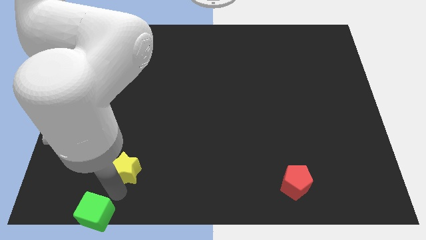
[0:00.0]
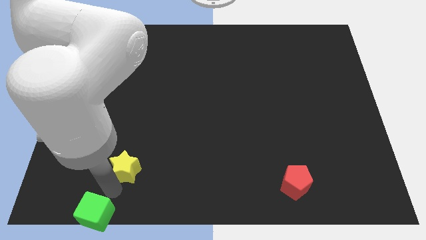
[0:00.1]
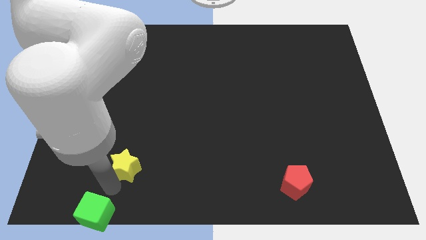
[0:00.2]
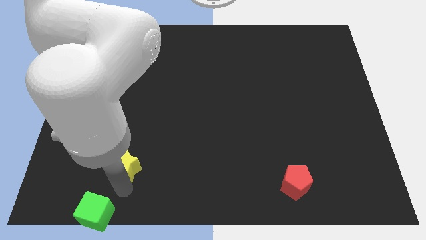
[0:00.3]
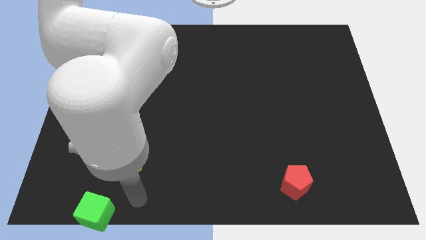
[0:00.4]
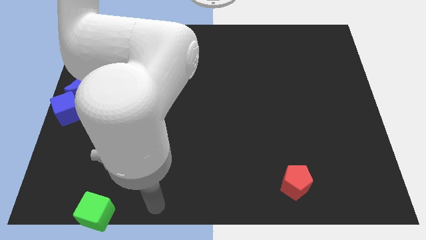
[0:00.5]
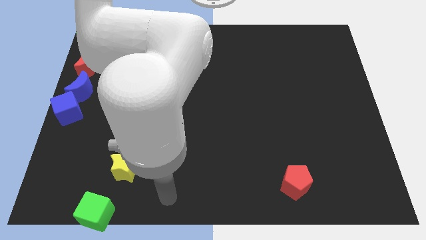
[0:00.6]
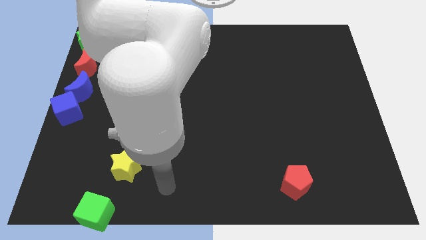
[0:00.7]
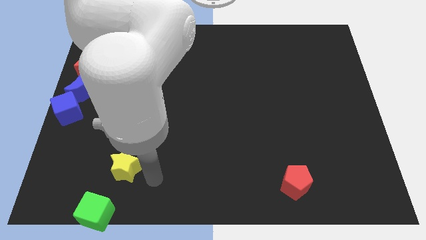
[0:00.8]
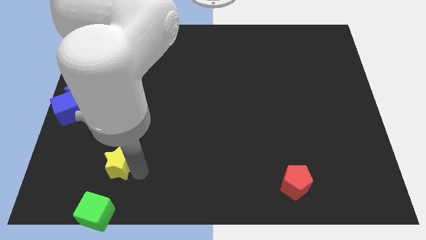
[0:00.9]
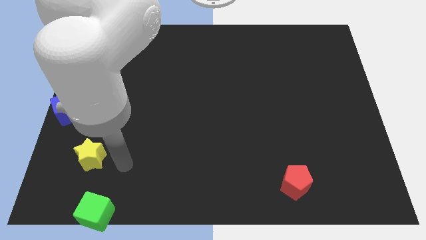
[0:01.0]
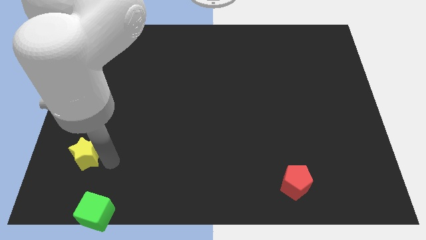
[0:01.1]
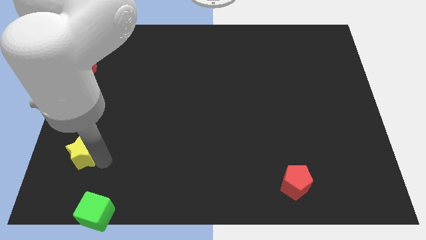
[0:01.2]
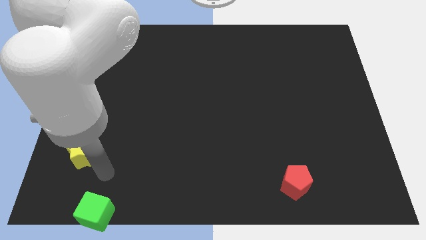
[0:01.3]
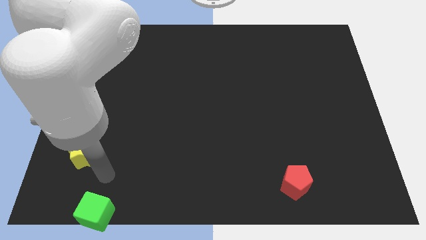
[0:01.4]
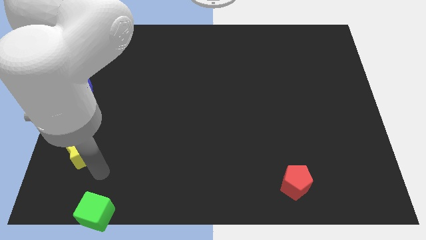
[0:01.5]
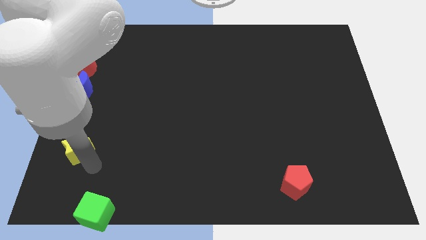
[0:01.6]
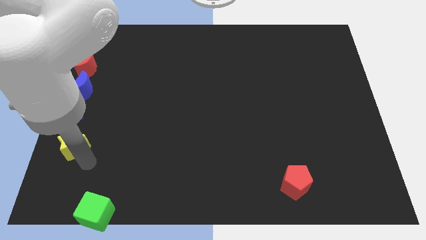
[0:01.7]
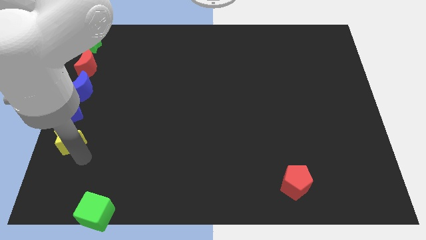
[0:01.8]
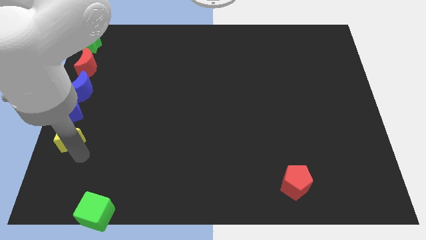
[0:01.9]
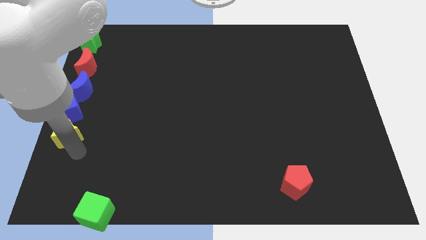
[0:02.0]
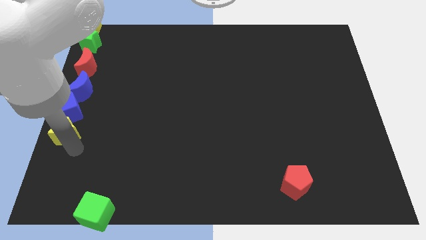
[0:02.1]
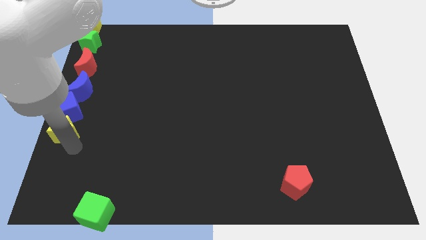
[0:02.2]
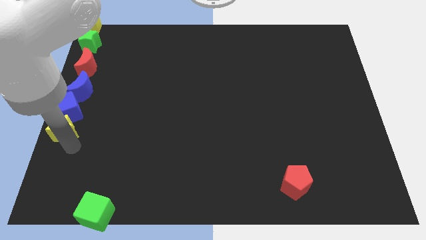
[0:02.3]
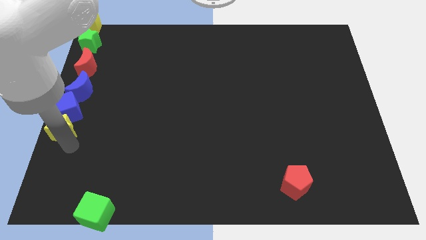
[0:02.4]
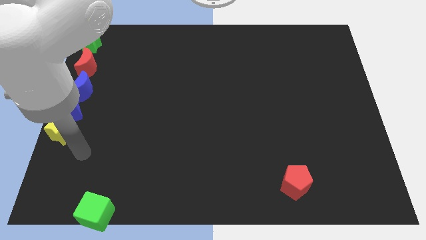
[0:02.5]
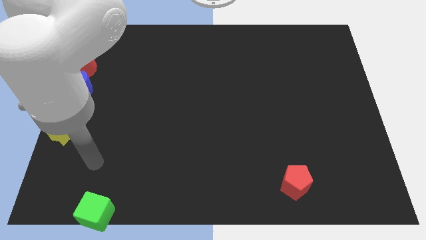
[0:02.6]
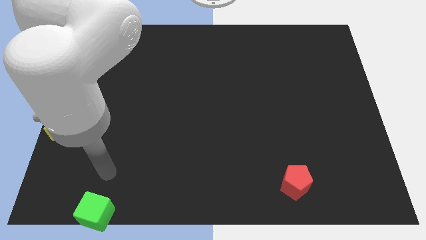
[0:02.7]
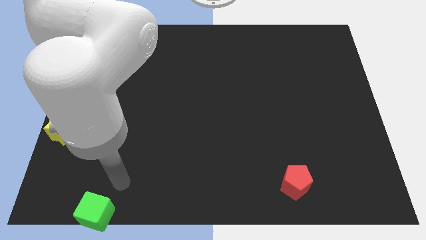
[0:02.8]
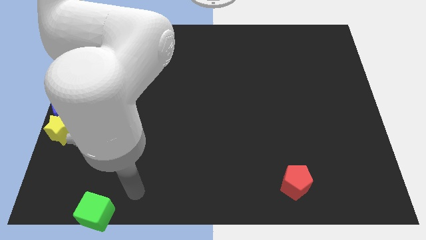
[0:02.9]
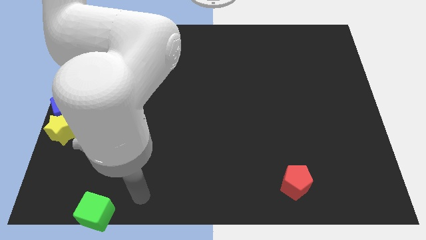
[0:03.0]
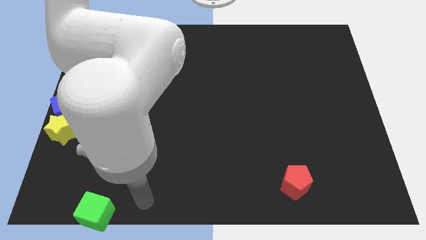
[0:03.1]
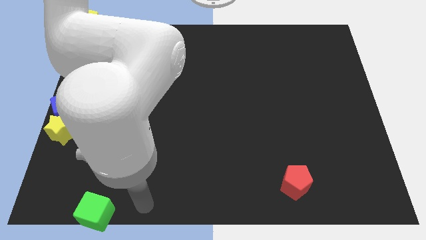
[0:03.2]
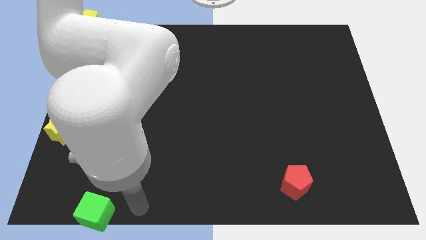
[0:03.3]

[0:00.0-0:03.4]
push the yellow star close to the blue cube

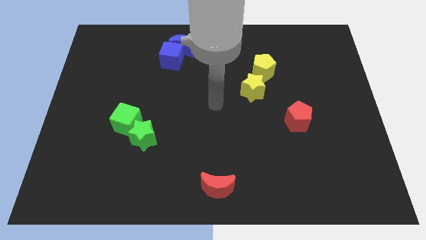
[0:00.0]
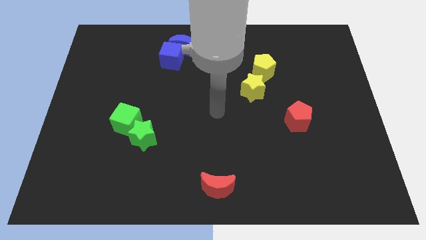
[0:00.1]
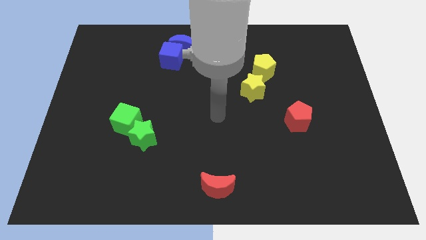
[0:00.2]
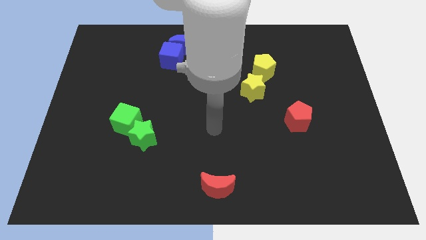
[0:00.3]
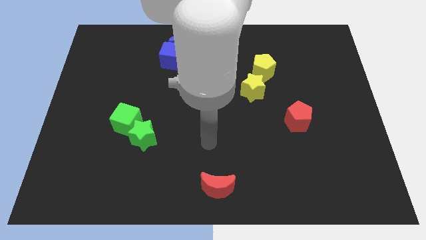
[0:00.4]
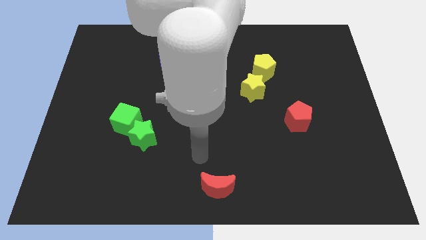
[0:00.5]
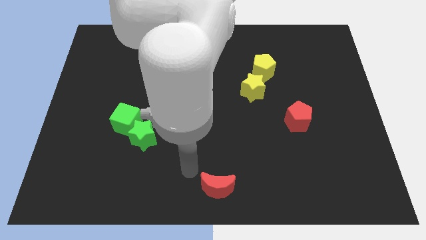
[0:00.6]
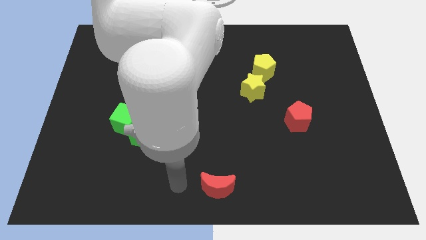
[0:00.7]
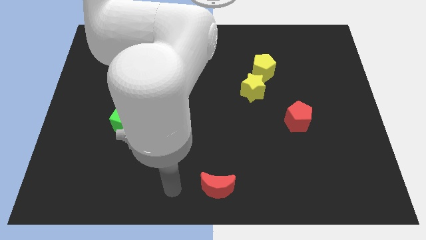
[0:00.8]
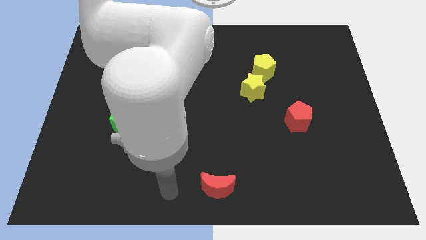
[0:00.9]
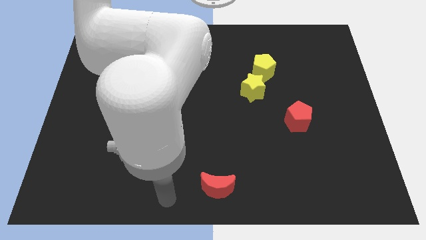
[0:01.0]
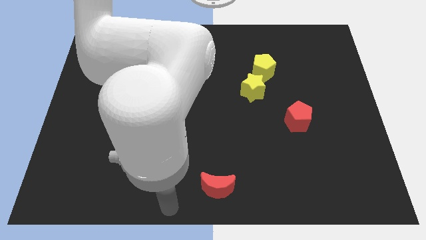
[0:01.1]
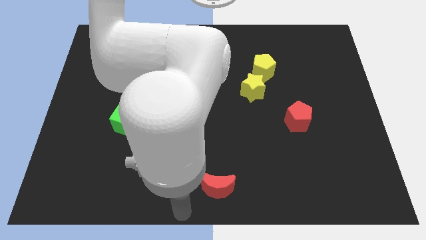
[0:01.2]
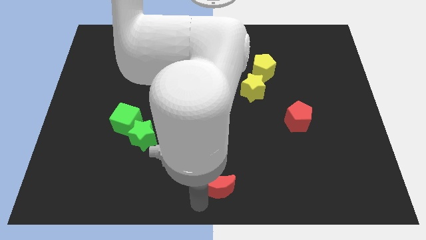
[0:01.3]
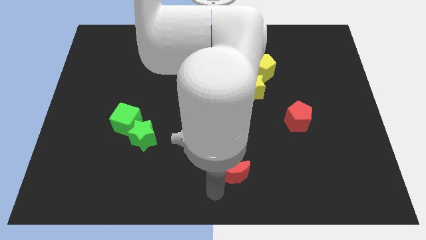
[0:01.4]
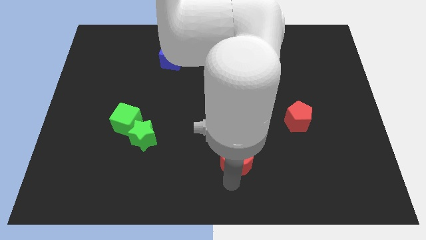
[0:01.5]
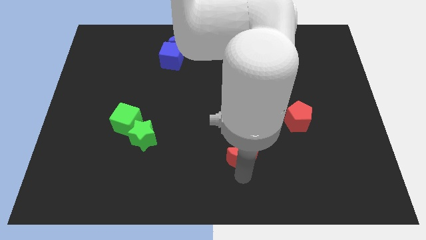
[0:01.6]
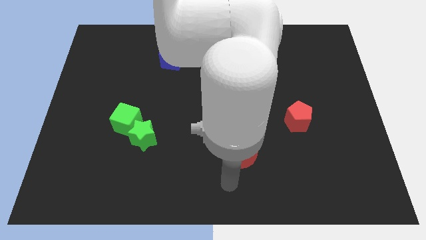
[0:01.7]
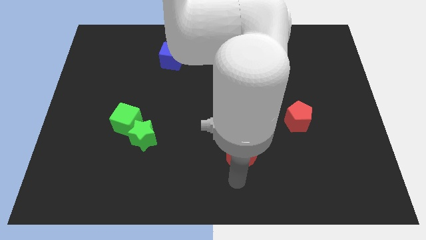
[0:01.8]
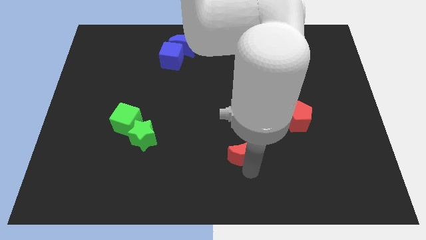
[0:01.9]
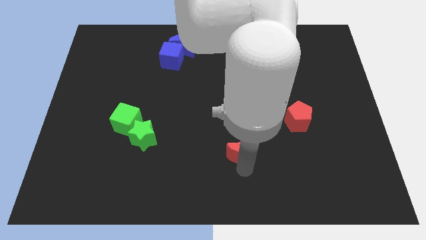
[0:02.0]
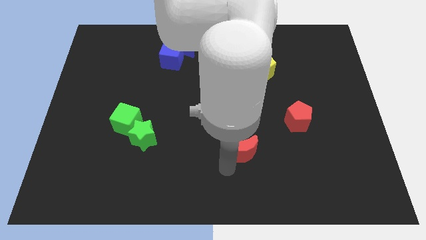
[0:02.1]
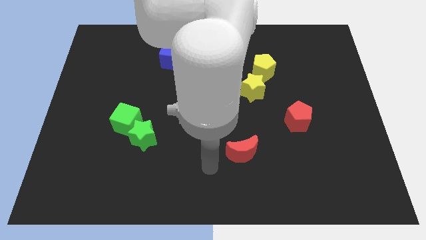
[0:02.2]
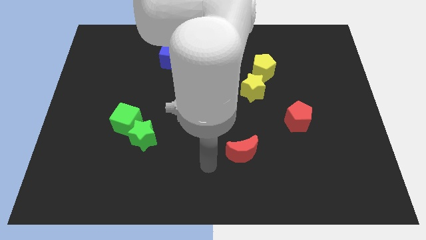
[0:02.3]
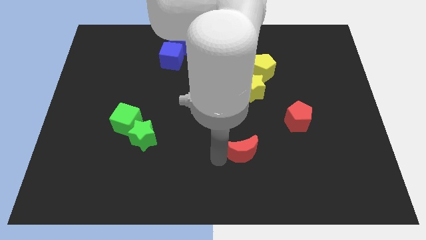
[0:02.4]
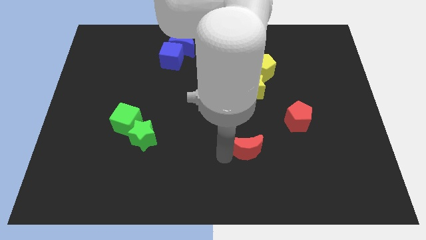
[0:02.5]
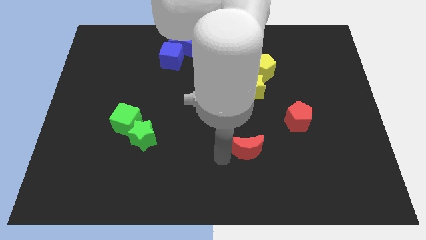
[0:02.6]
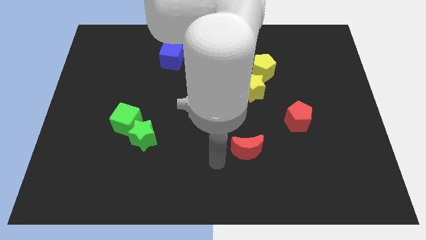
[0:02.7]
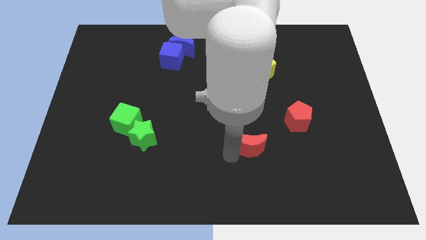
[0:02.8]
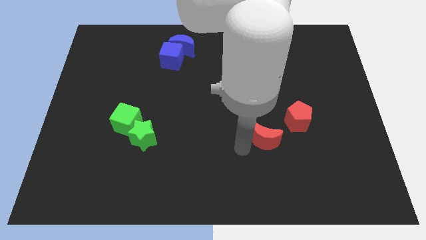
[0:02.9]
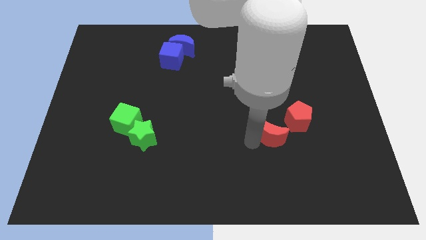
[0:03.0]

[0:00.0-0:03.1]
place the red crescent below the yellow star

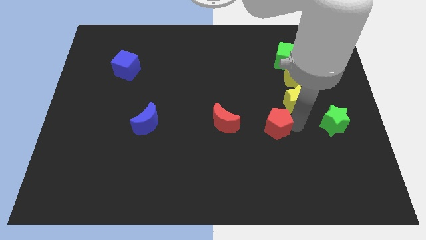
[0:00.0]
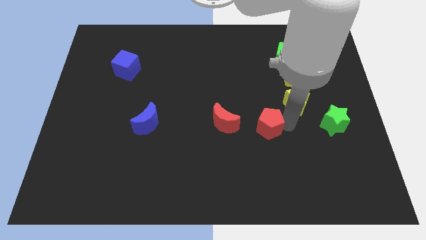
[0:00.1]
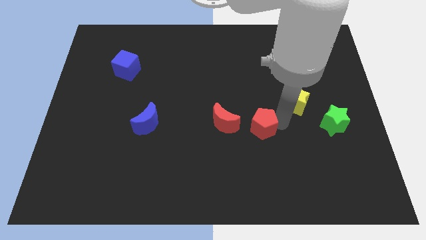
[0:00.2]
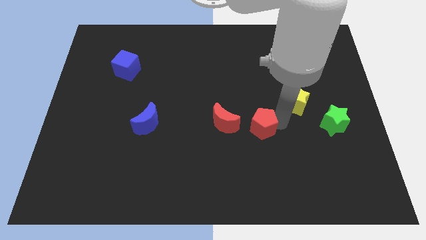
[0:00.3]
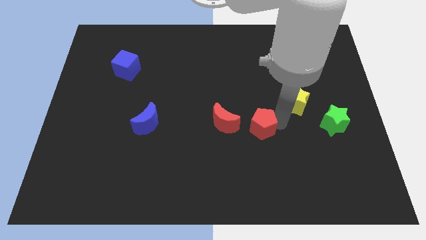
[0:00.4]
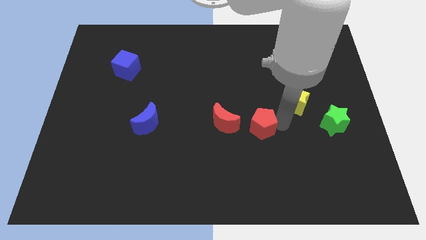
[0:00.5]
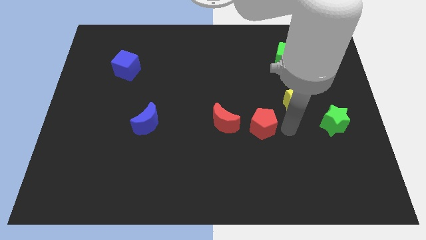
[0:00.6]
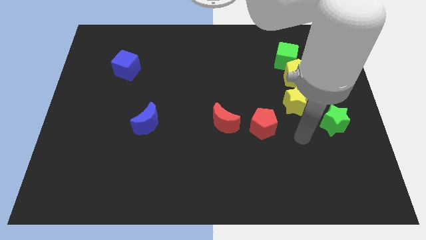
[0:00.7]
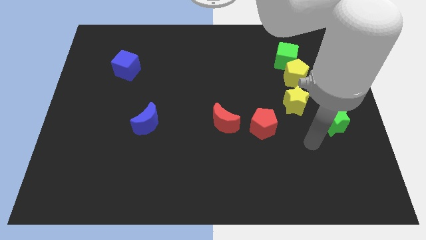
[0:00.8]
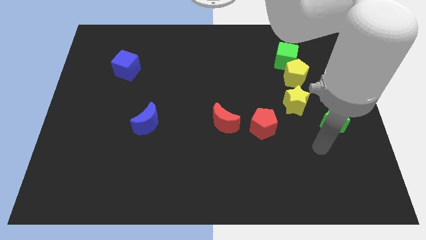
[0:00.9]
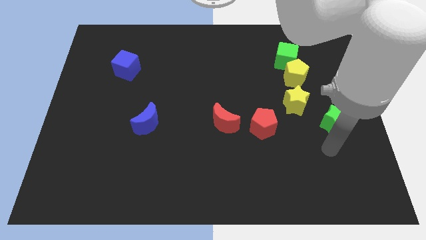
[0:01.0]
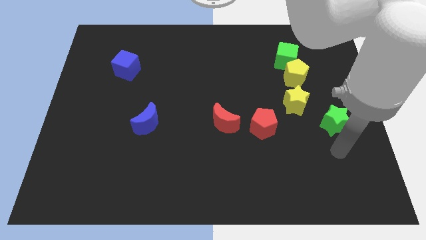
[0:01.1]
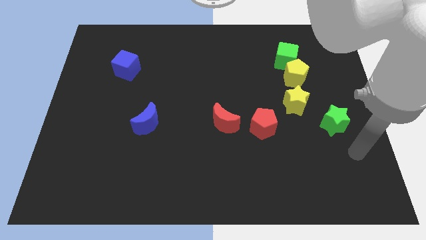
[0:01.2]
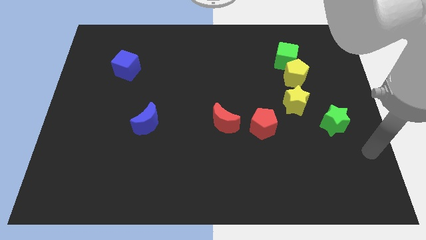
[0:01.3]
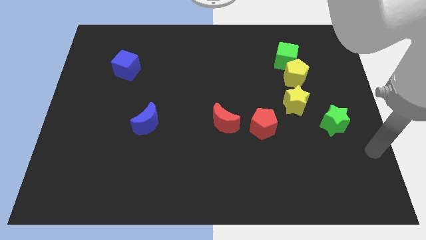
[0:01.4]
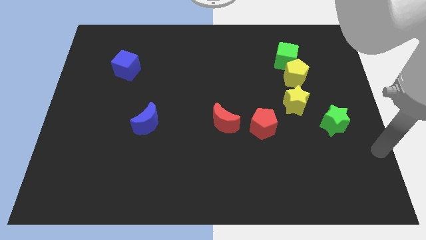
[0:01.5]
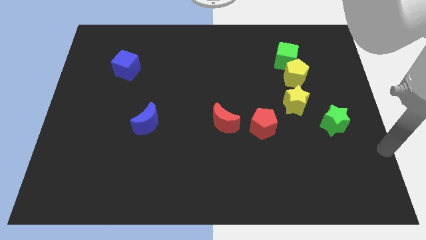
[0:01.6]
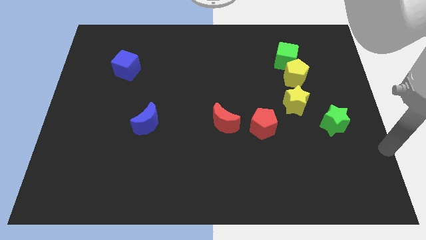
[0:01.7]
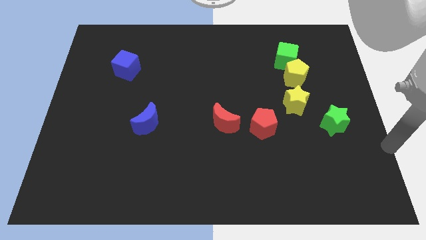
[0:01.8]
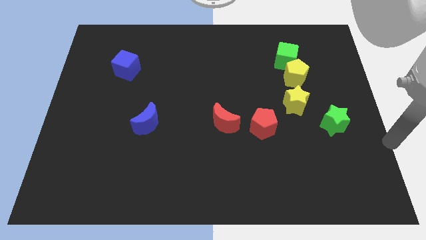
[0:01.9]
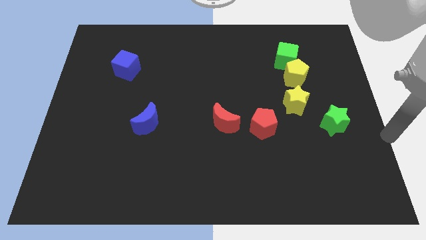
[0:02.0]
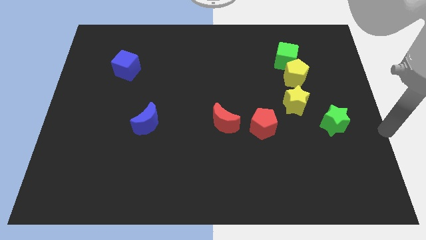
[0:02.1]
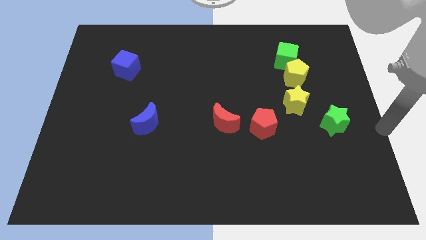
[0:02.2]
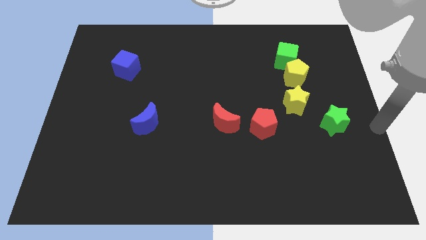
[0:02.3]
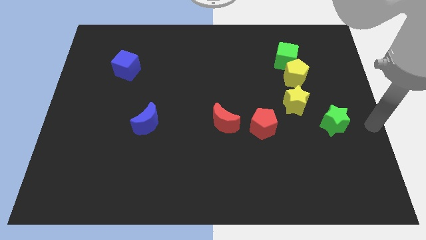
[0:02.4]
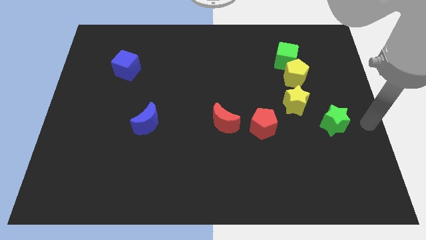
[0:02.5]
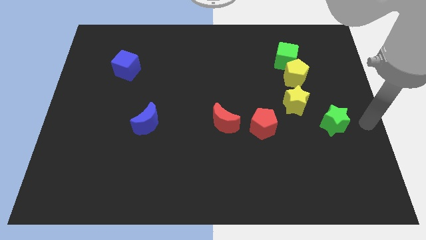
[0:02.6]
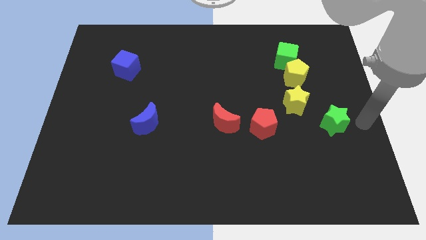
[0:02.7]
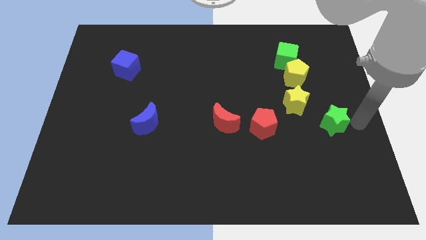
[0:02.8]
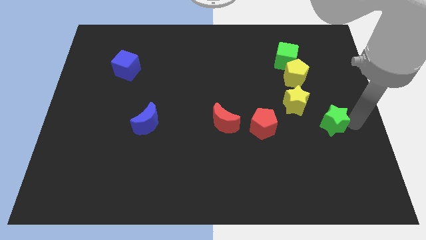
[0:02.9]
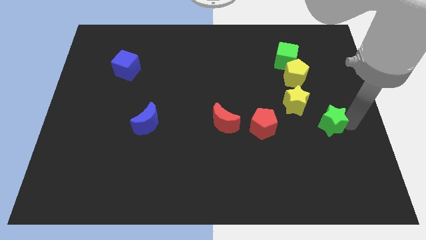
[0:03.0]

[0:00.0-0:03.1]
move the arm away from the red pentagon
